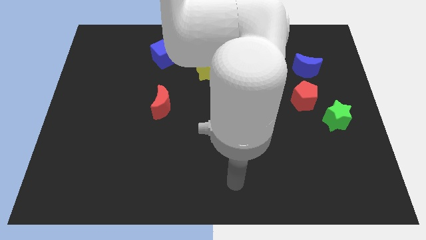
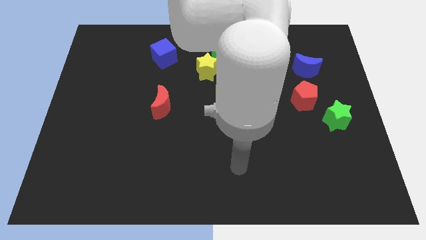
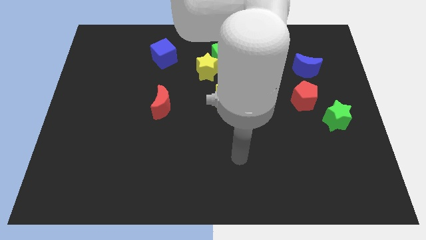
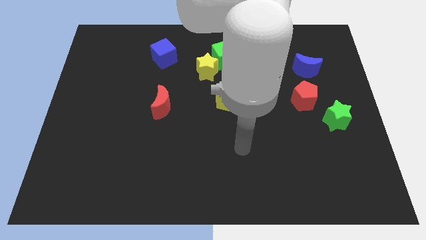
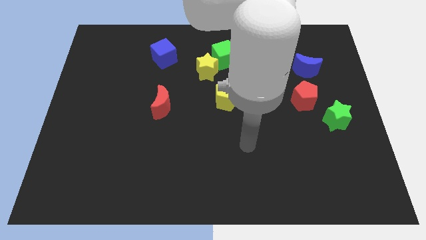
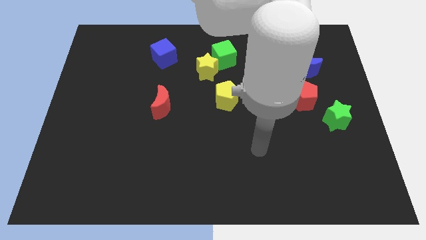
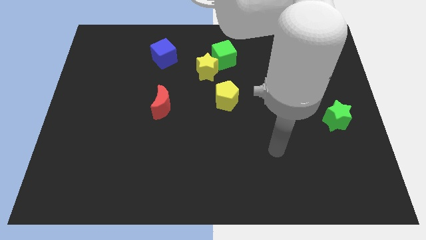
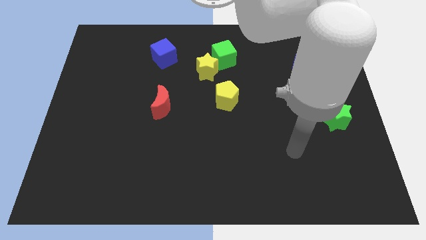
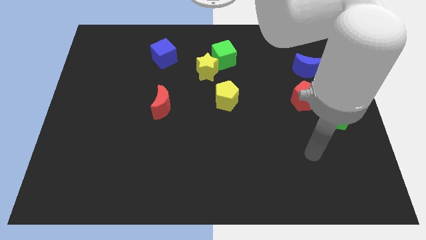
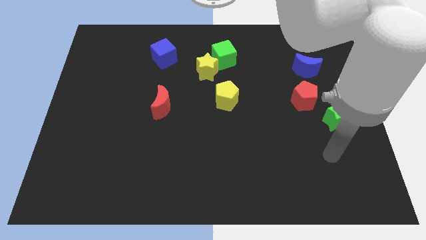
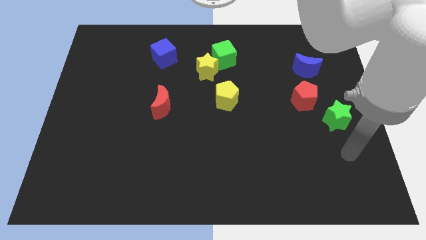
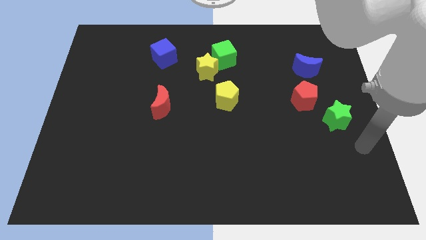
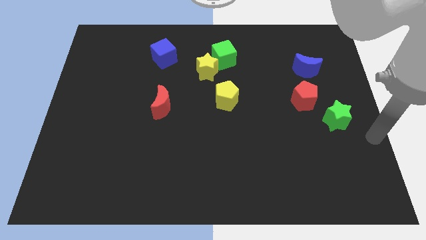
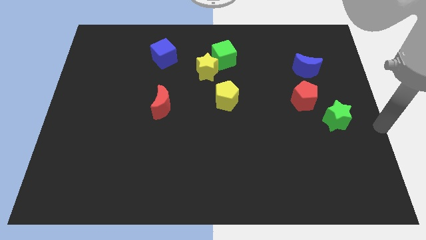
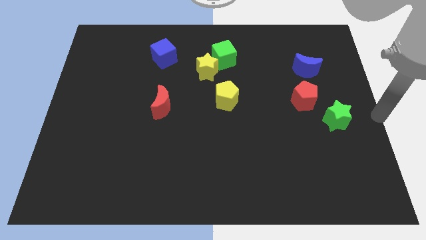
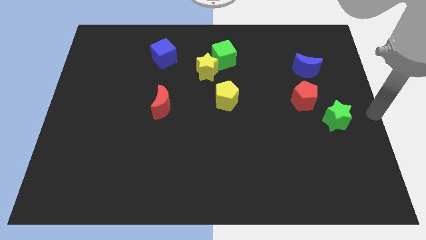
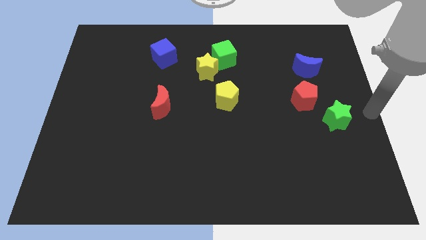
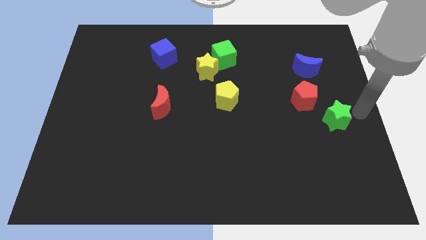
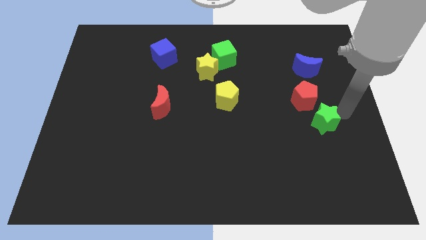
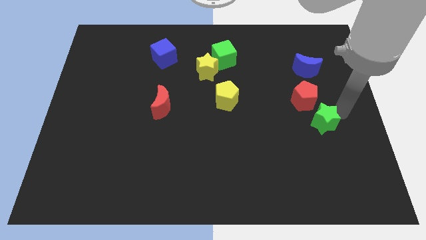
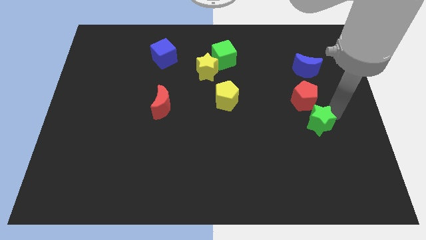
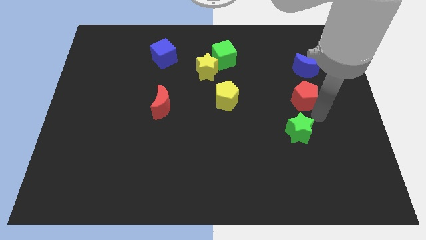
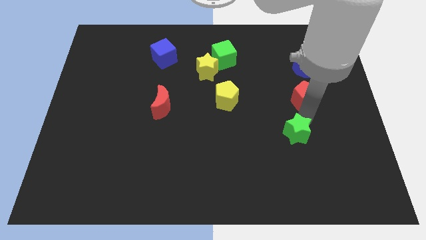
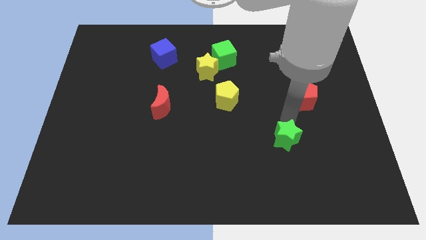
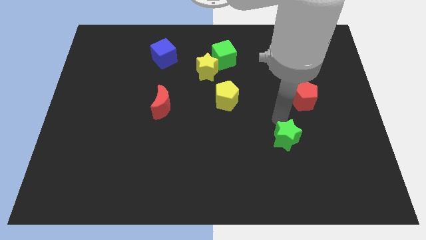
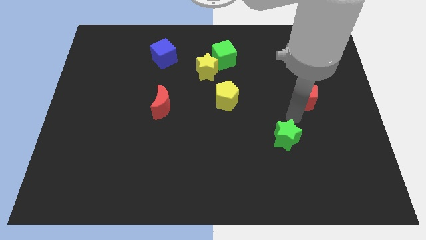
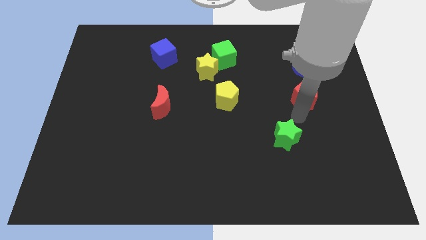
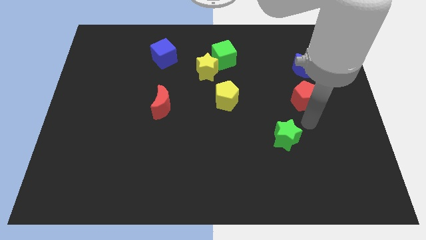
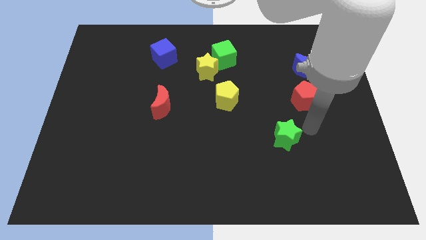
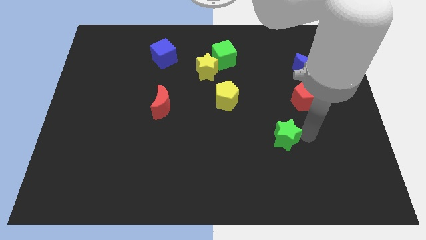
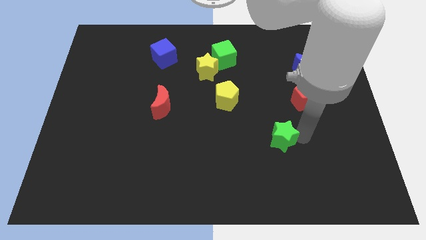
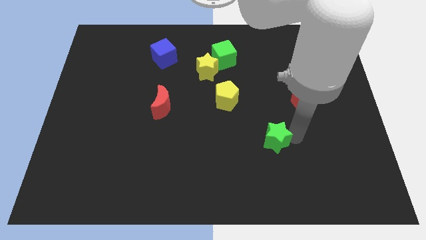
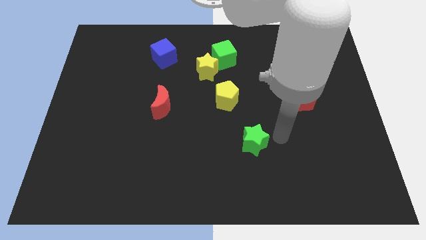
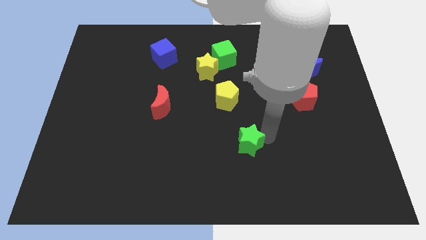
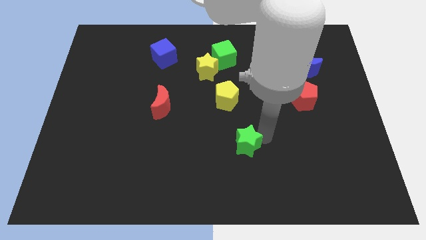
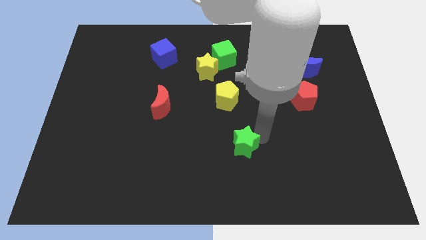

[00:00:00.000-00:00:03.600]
push the green star towards left

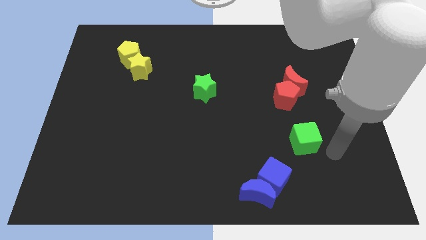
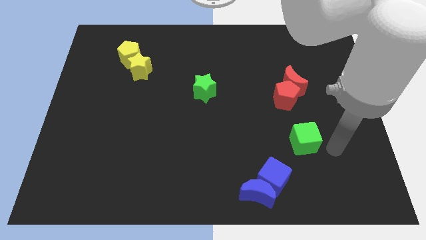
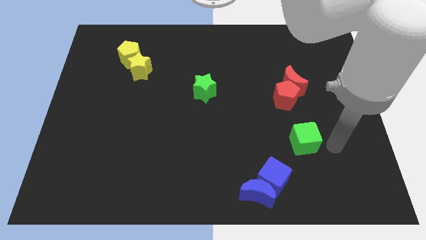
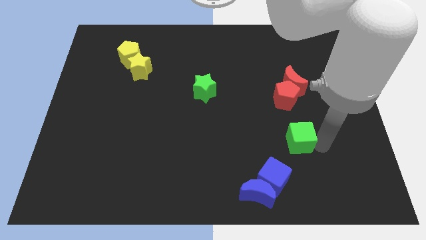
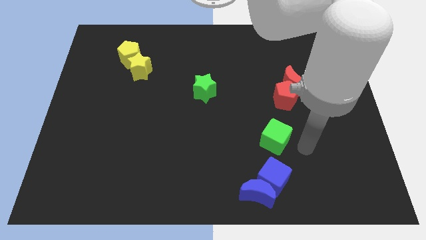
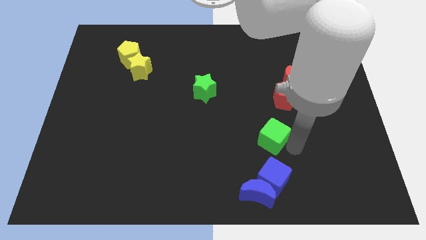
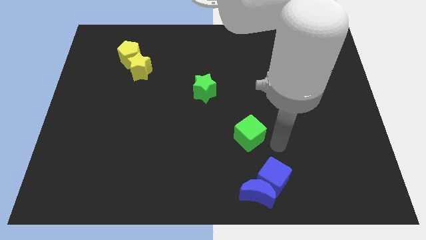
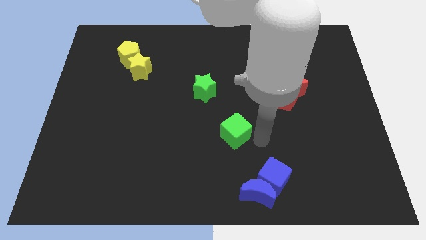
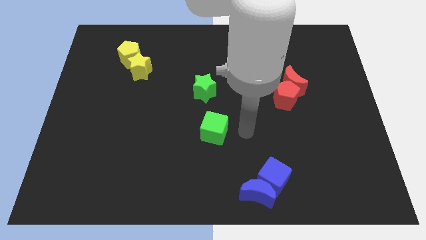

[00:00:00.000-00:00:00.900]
move the green cube to the left of the board

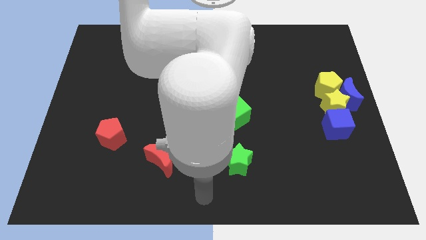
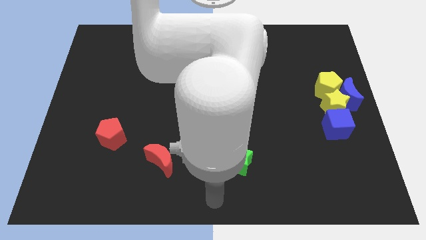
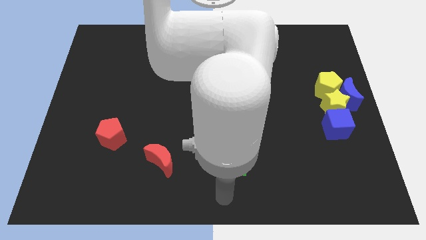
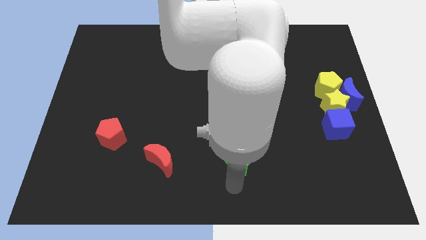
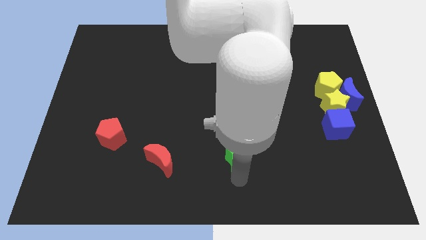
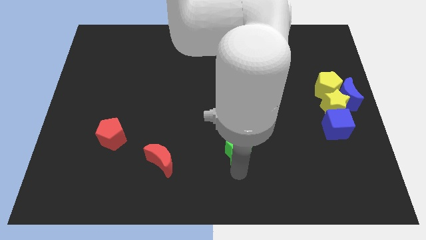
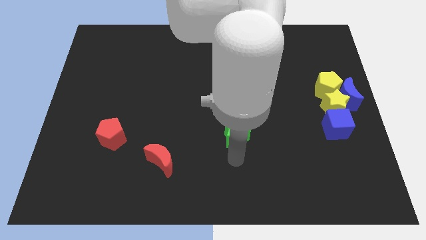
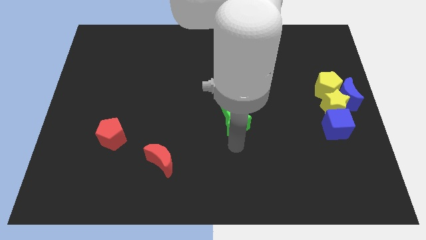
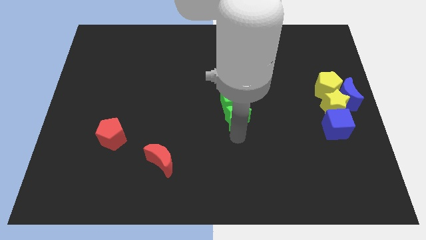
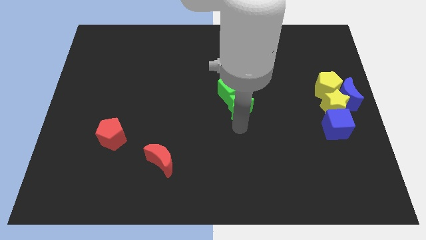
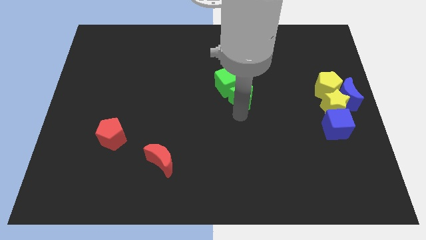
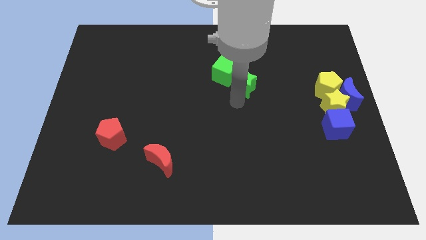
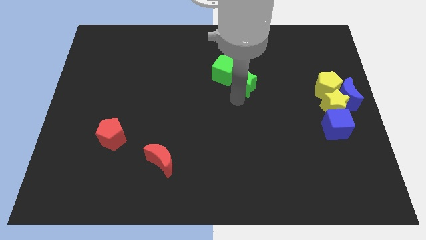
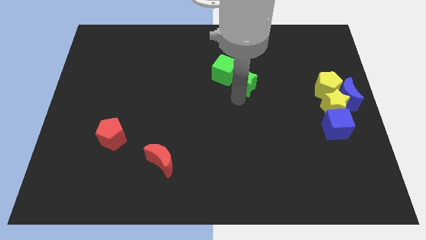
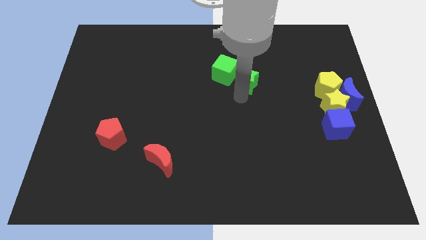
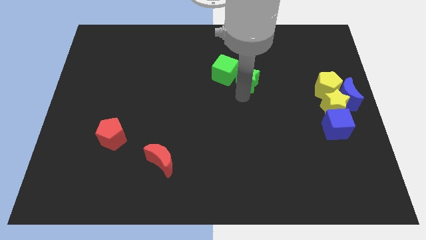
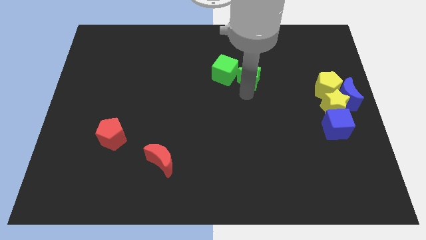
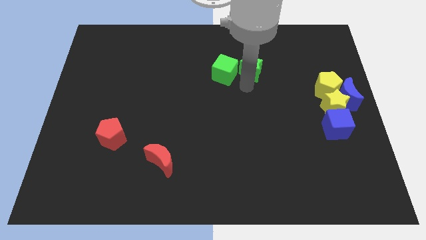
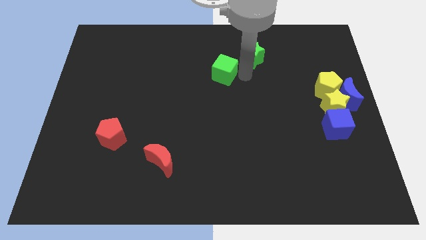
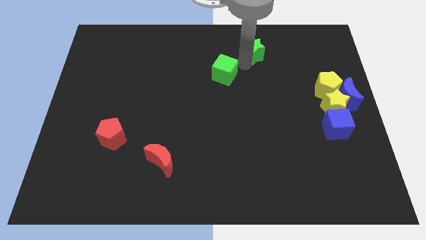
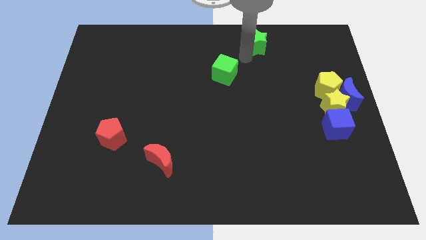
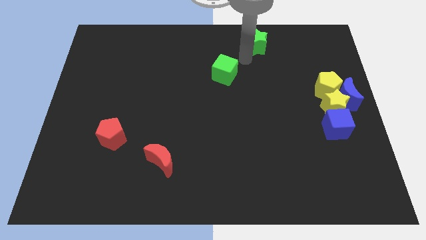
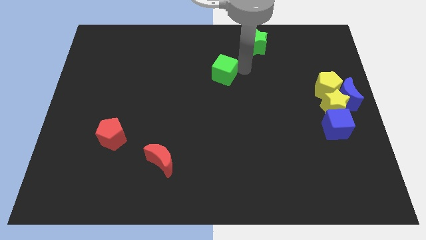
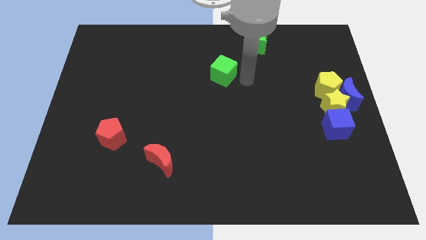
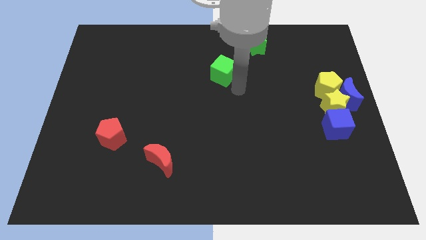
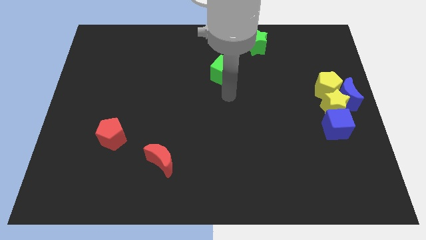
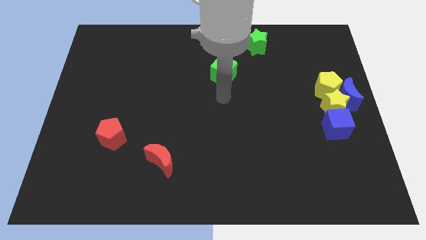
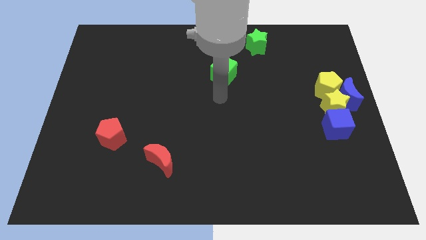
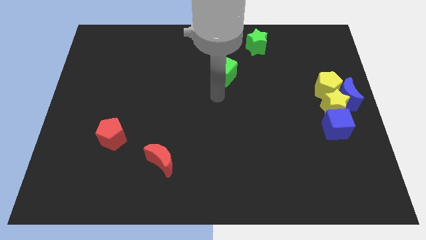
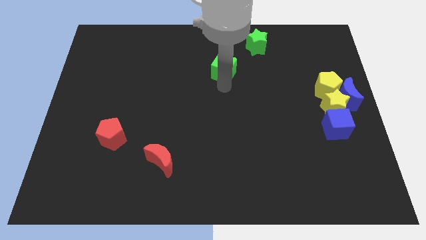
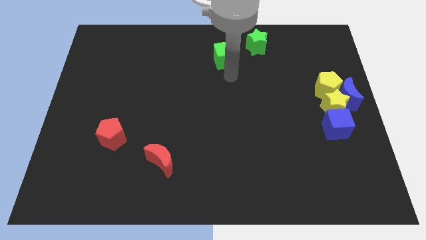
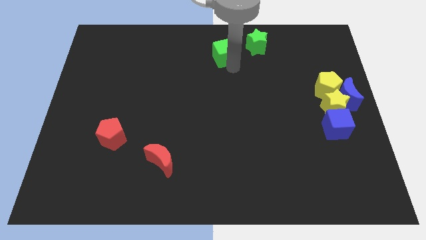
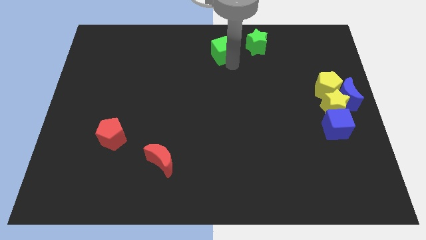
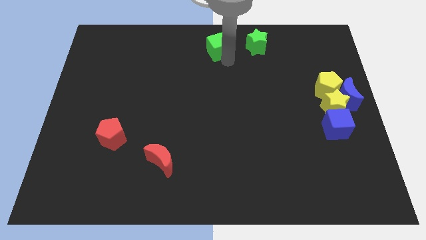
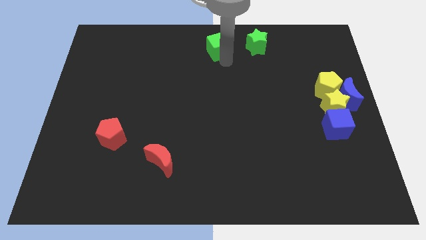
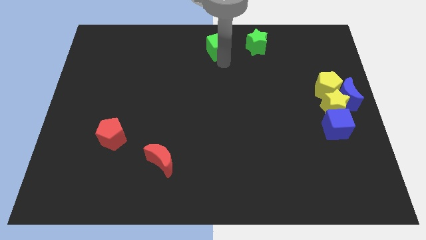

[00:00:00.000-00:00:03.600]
move the green blocks in a horizontal line at the top center of the board

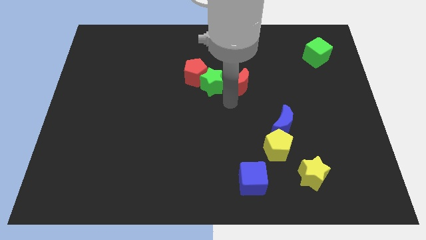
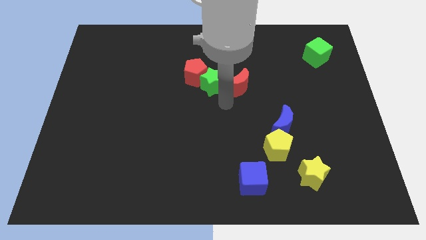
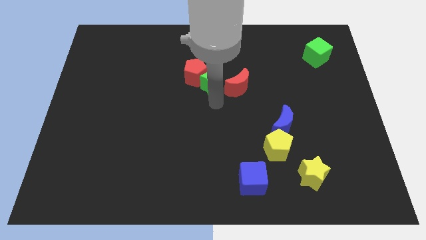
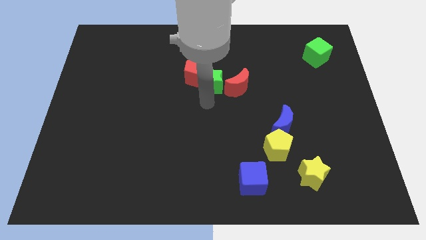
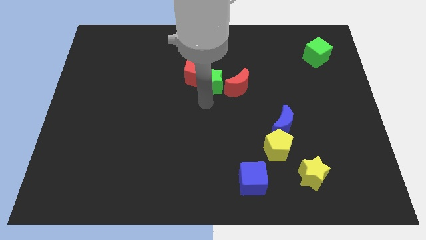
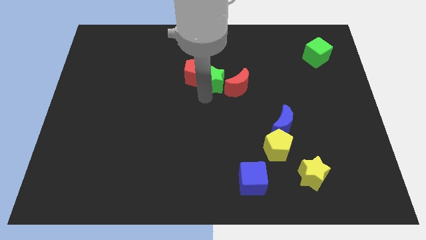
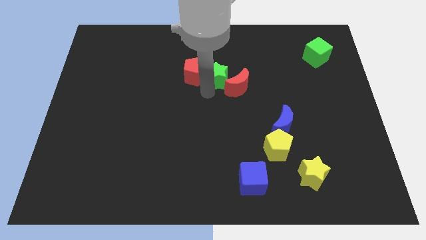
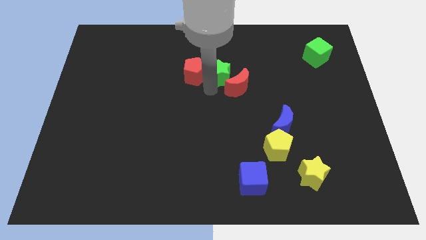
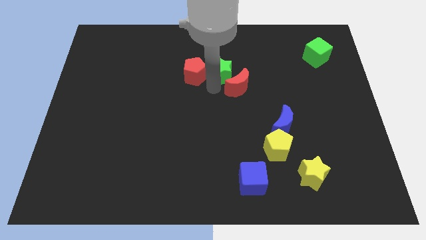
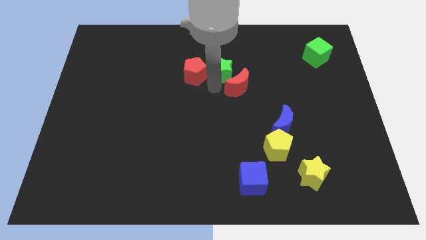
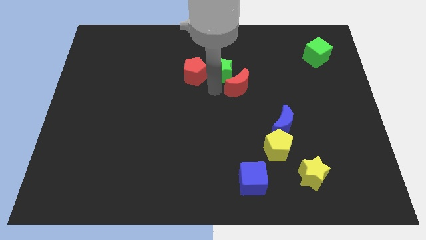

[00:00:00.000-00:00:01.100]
move the green star in between the red pentagon and red crescent
